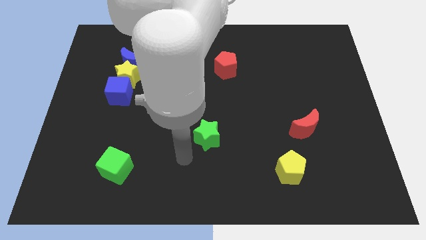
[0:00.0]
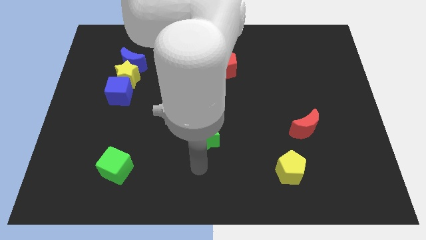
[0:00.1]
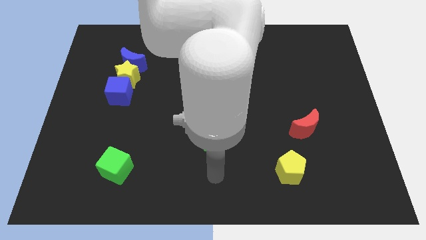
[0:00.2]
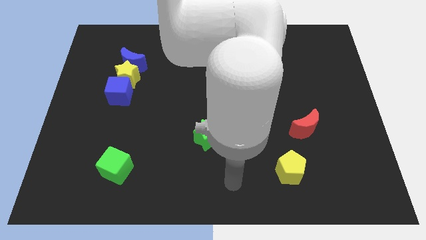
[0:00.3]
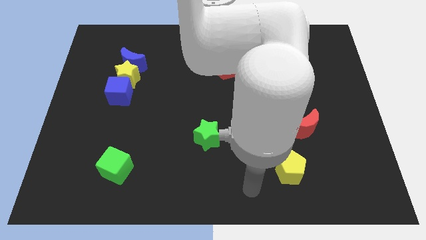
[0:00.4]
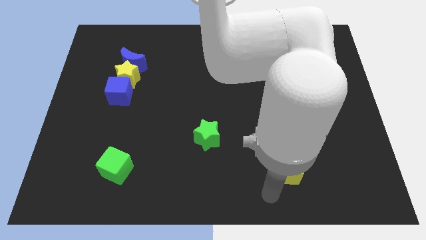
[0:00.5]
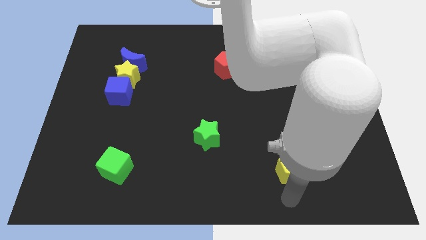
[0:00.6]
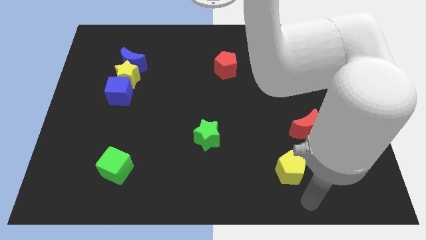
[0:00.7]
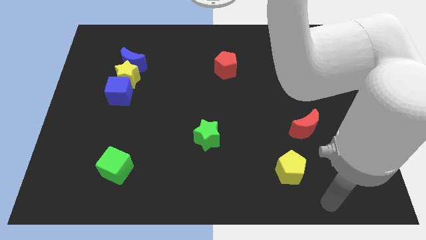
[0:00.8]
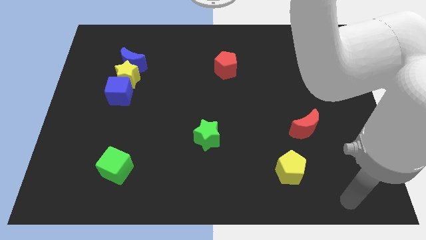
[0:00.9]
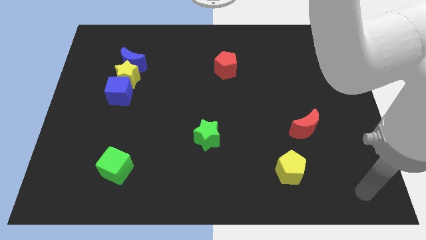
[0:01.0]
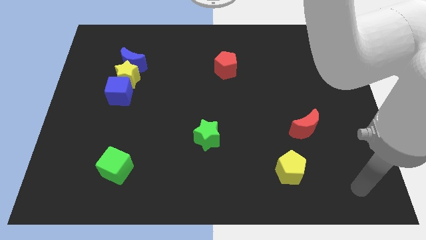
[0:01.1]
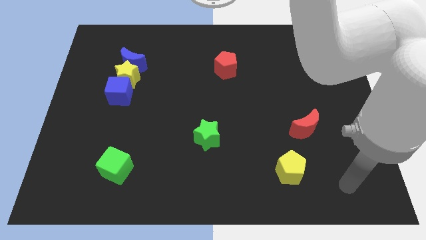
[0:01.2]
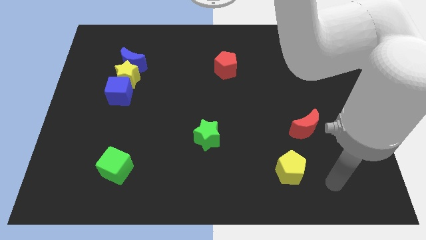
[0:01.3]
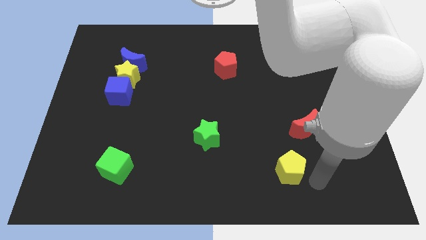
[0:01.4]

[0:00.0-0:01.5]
move the arm to the right of the yellow pentagon

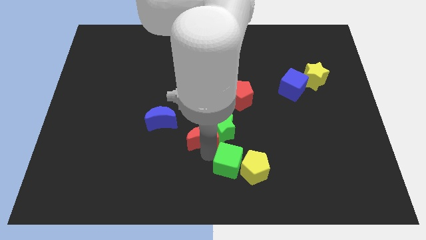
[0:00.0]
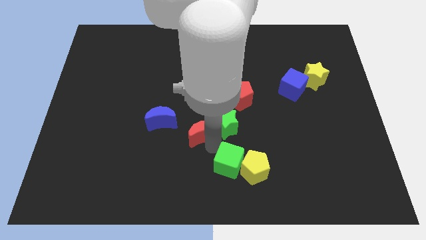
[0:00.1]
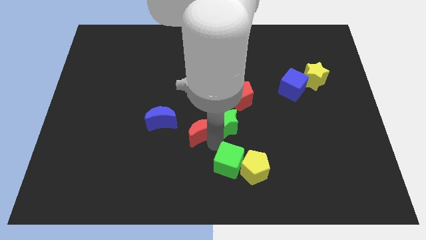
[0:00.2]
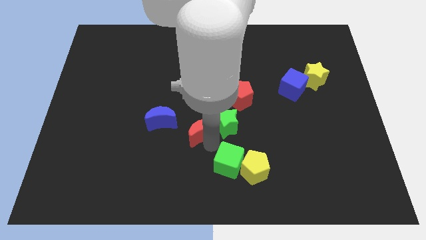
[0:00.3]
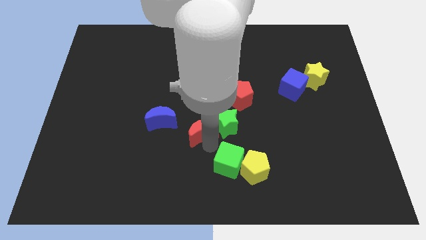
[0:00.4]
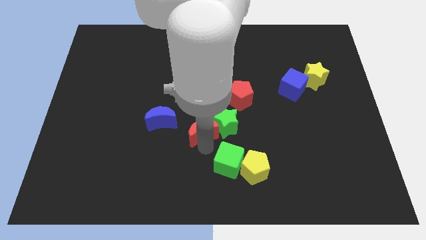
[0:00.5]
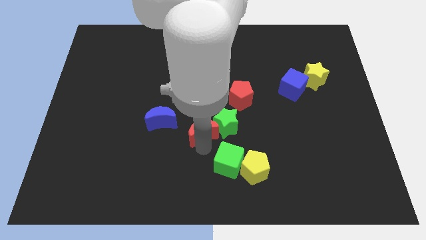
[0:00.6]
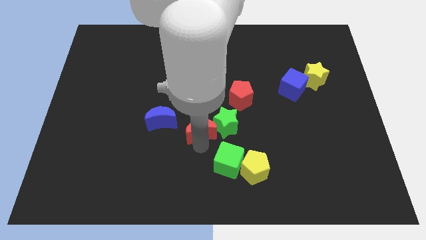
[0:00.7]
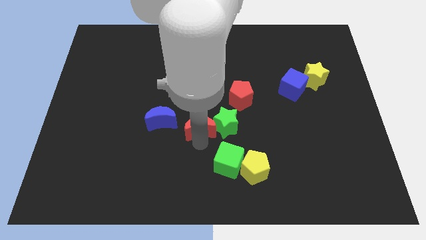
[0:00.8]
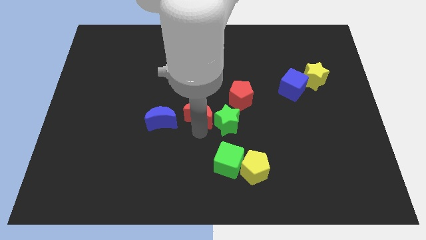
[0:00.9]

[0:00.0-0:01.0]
move the red crescent to the left of the green star

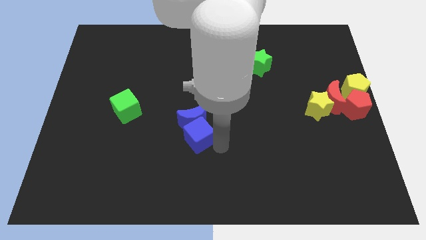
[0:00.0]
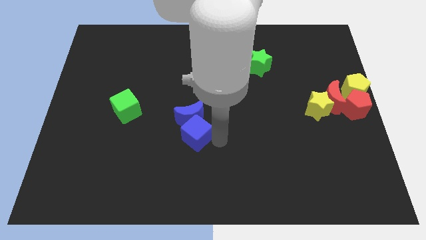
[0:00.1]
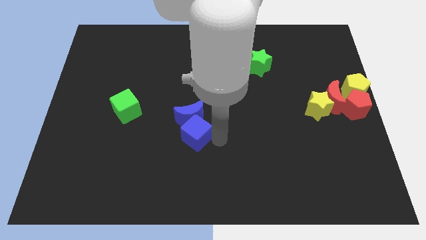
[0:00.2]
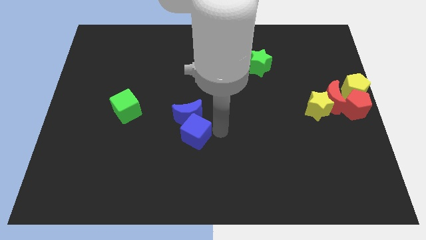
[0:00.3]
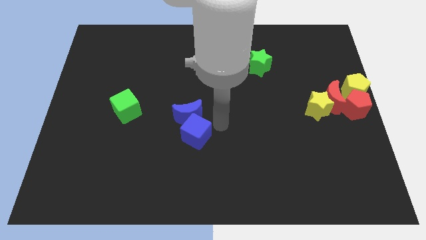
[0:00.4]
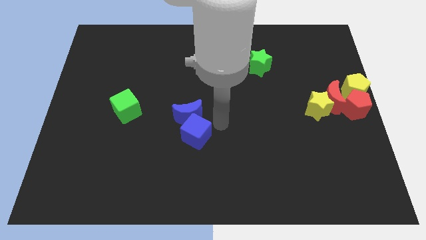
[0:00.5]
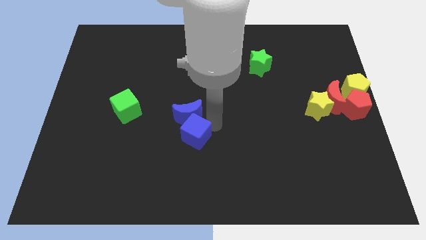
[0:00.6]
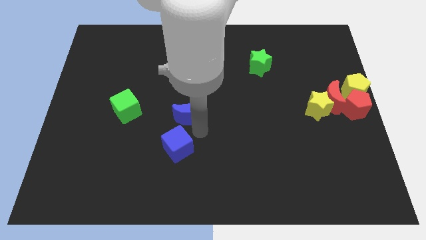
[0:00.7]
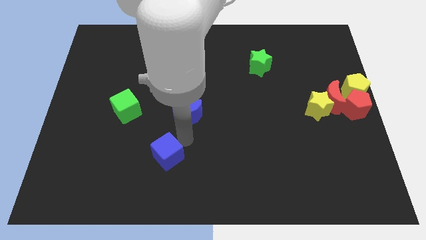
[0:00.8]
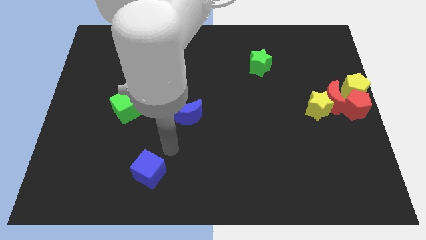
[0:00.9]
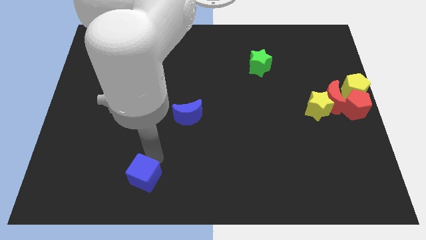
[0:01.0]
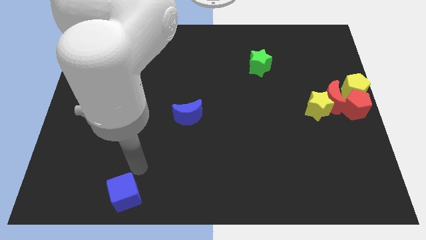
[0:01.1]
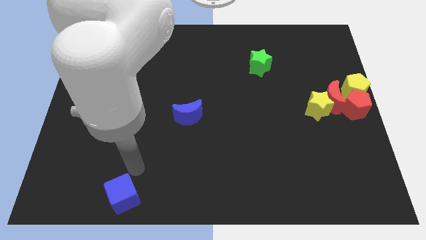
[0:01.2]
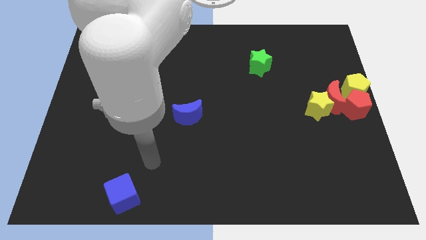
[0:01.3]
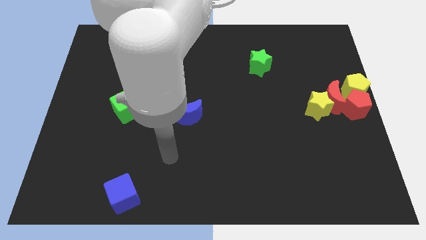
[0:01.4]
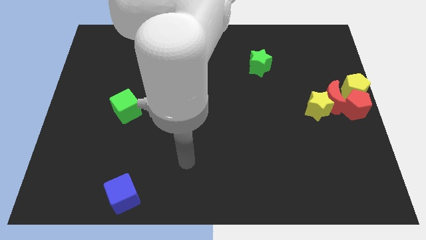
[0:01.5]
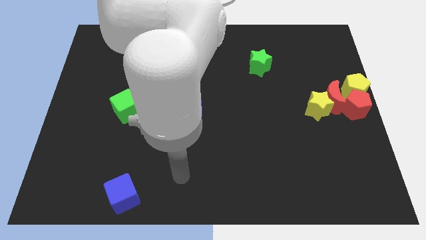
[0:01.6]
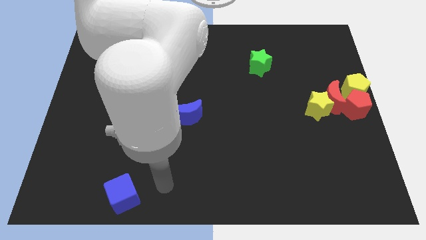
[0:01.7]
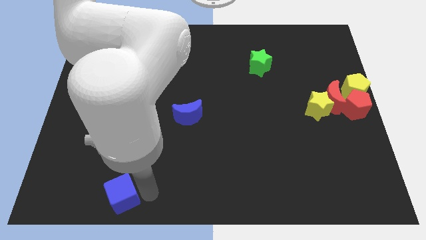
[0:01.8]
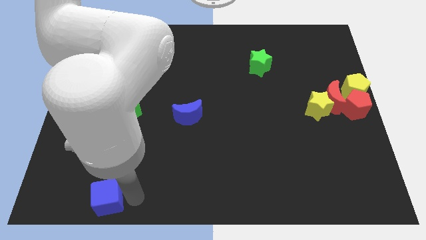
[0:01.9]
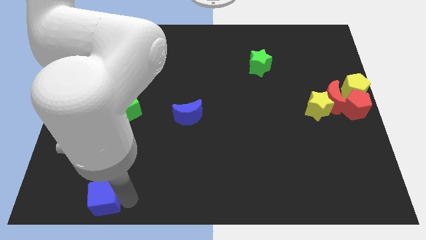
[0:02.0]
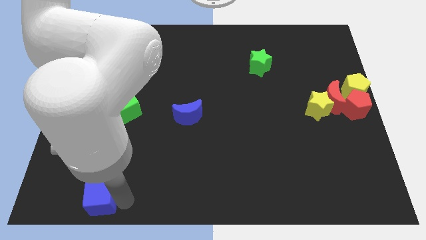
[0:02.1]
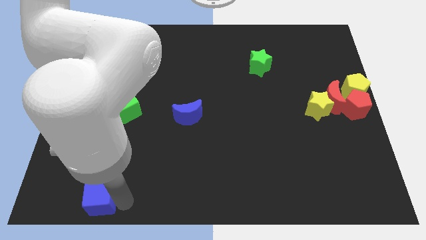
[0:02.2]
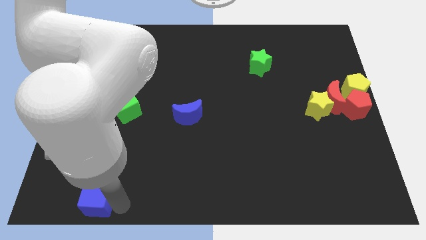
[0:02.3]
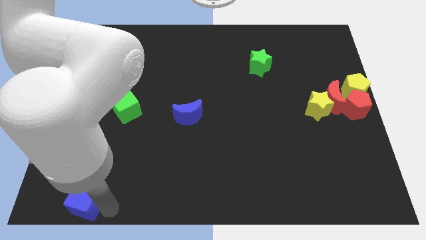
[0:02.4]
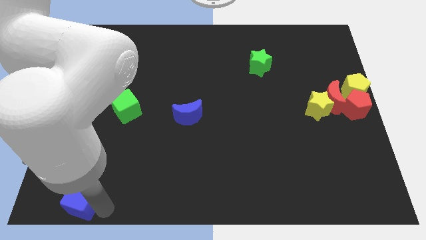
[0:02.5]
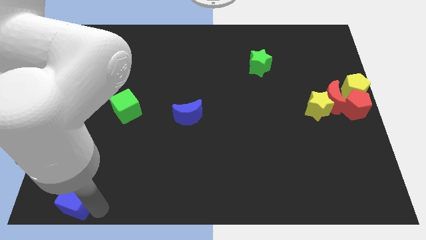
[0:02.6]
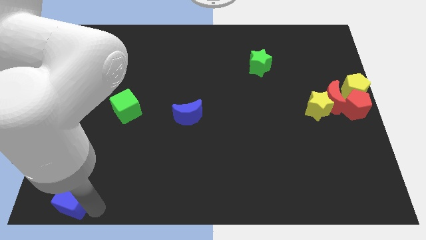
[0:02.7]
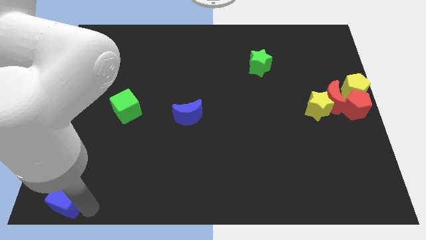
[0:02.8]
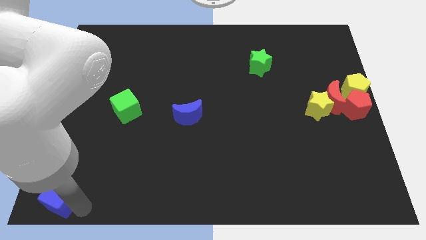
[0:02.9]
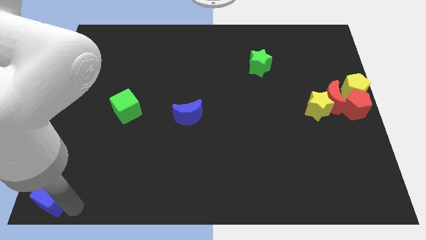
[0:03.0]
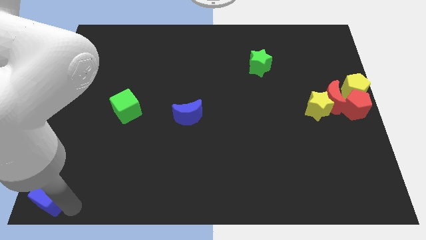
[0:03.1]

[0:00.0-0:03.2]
put the blue cube on the bottom left of the board

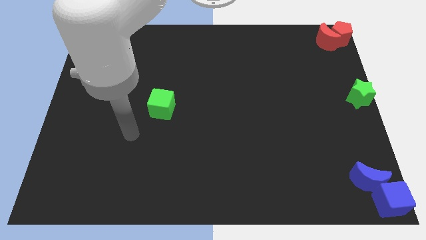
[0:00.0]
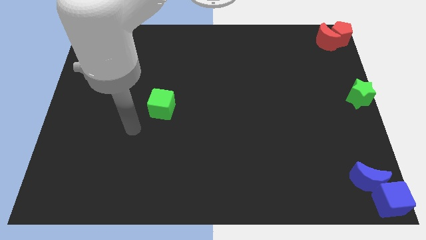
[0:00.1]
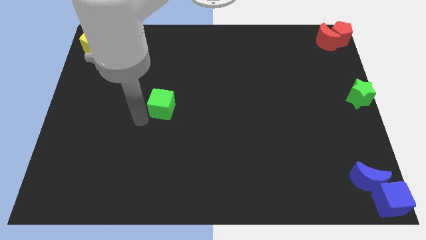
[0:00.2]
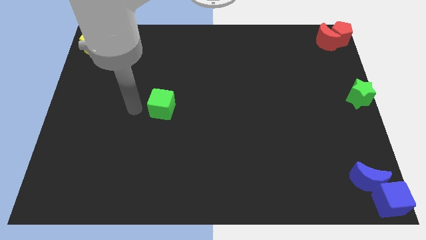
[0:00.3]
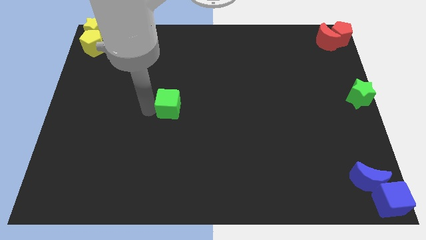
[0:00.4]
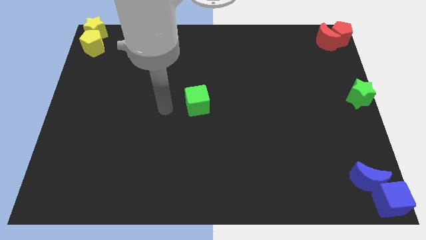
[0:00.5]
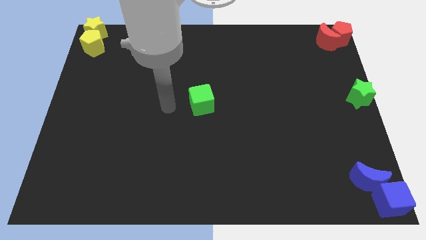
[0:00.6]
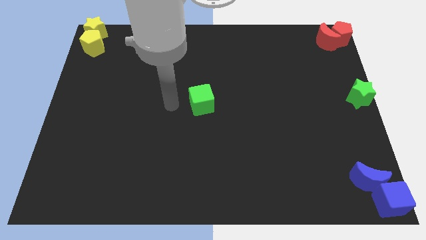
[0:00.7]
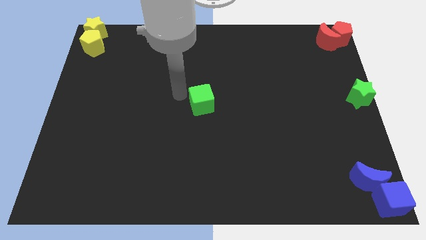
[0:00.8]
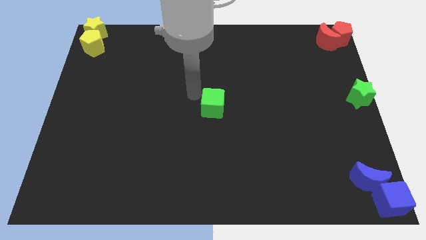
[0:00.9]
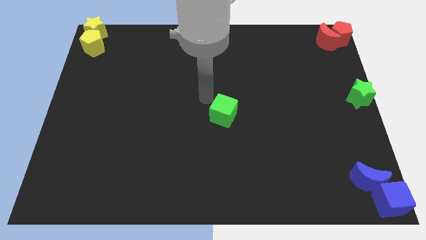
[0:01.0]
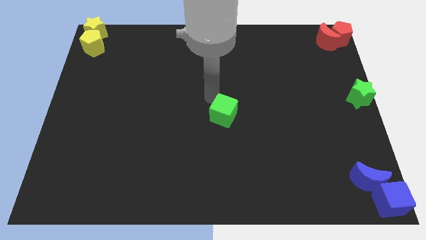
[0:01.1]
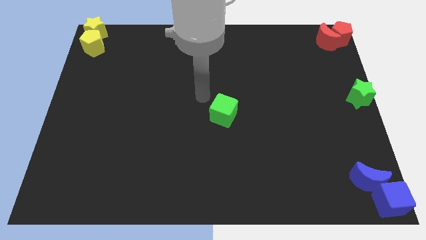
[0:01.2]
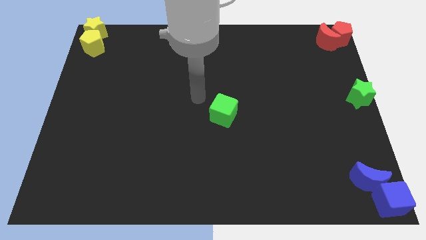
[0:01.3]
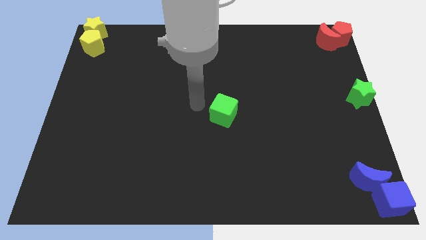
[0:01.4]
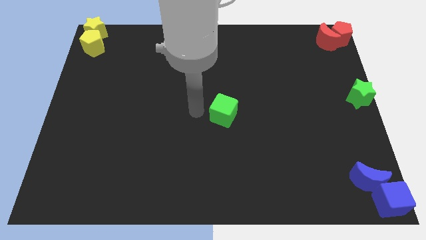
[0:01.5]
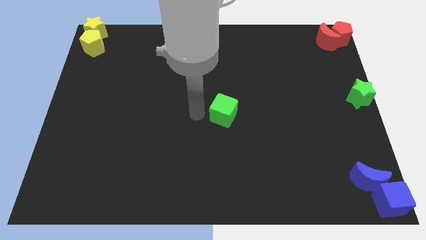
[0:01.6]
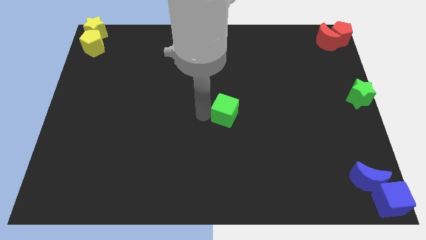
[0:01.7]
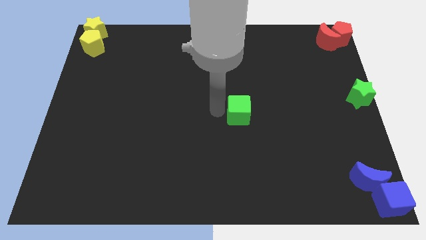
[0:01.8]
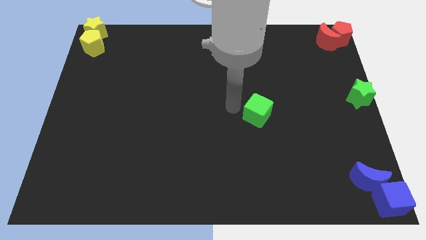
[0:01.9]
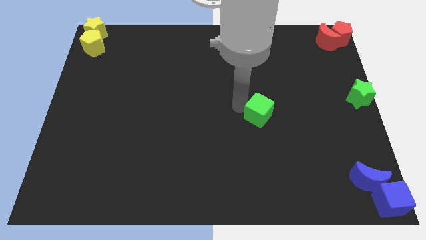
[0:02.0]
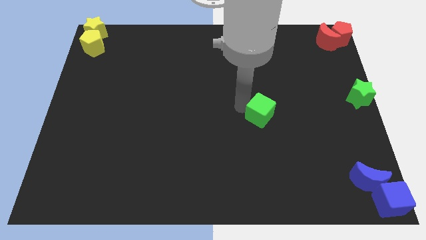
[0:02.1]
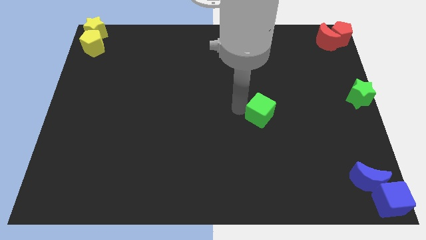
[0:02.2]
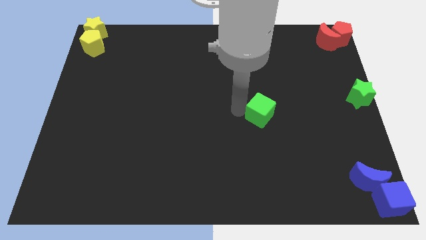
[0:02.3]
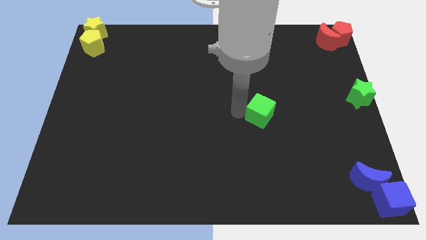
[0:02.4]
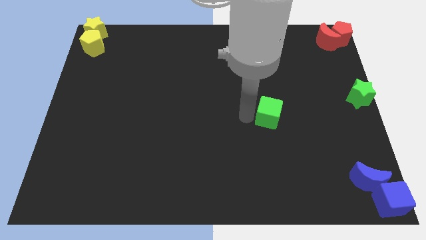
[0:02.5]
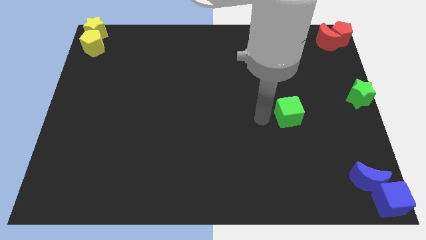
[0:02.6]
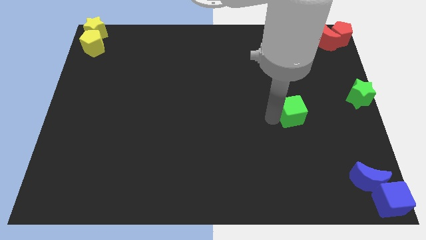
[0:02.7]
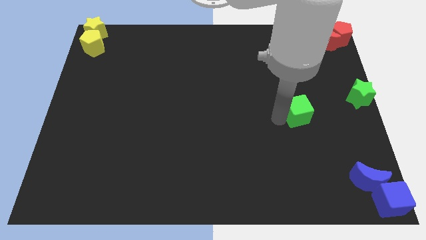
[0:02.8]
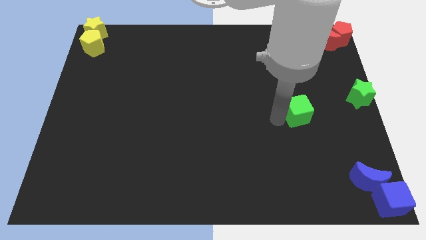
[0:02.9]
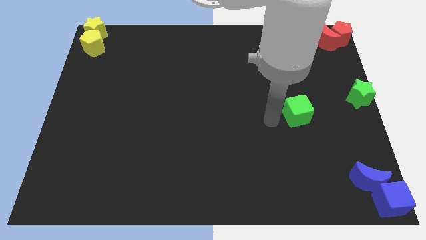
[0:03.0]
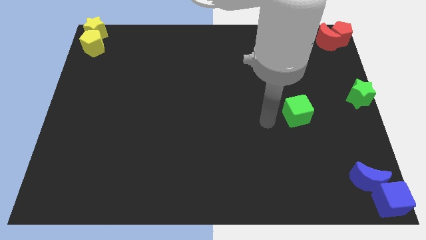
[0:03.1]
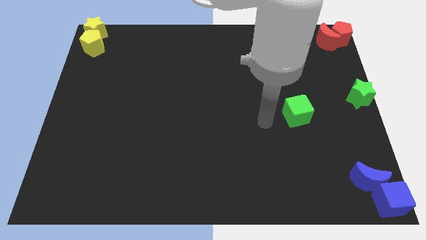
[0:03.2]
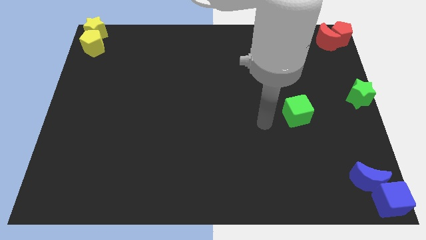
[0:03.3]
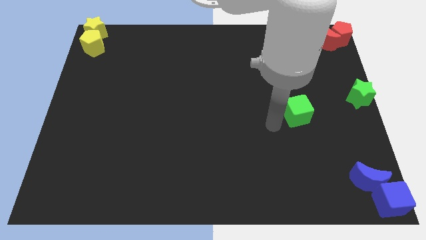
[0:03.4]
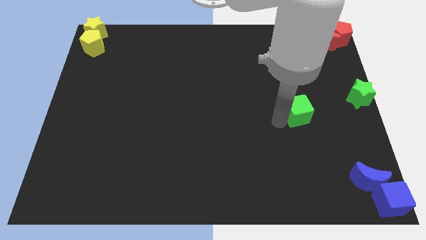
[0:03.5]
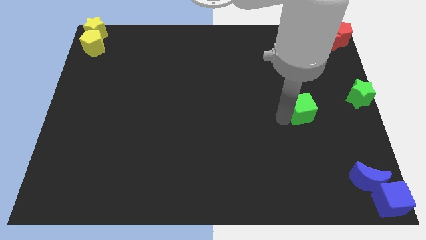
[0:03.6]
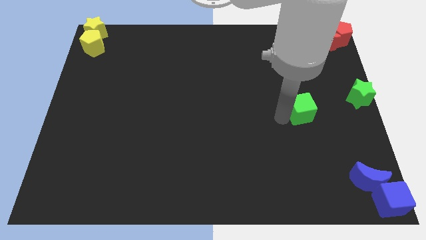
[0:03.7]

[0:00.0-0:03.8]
move the green cube to the right side
